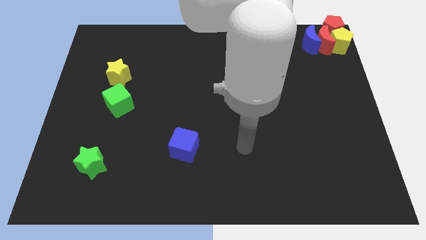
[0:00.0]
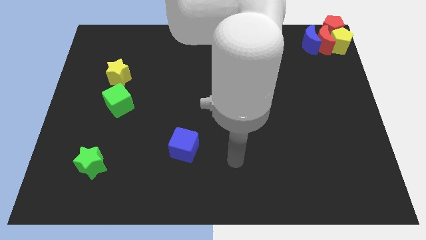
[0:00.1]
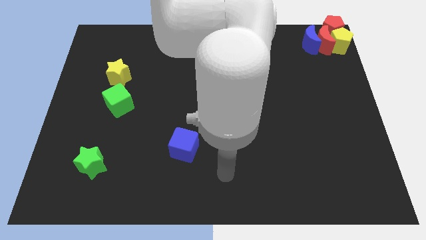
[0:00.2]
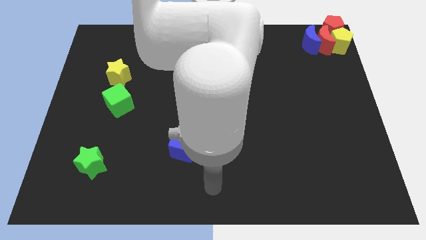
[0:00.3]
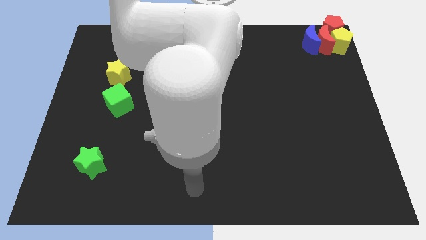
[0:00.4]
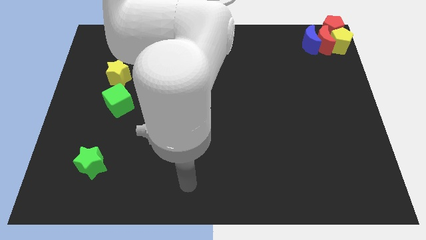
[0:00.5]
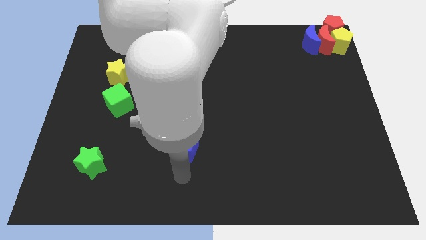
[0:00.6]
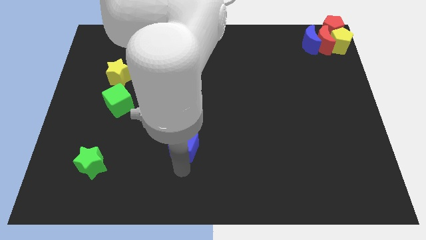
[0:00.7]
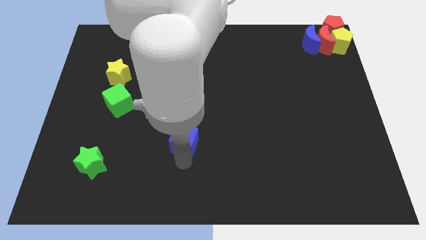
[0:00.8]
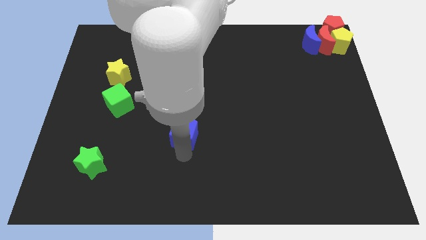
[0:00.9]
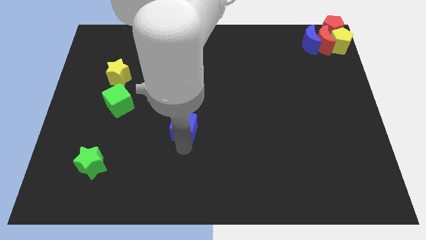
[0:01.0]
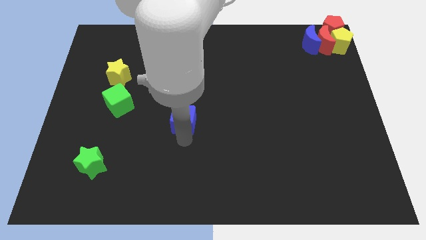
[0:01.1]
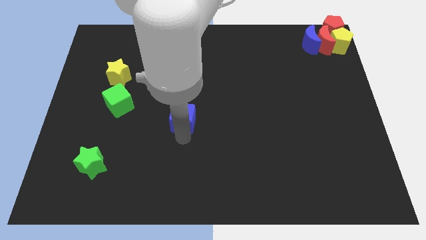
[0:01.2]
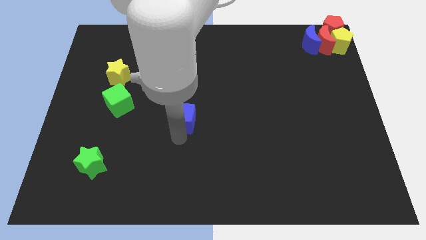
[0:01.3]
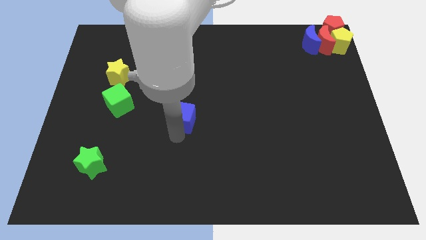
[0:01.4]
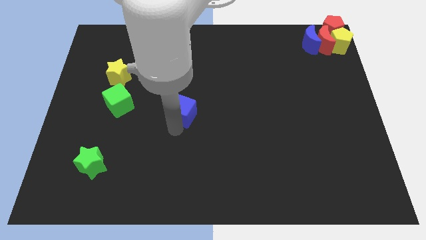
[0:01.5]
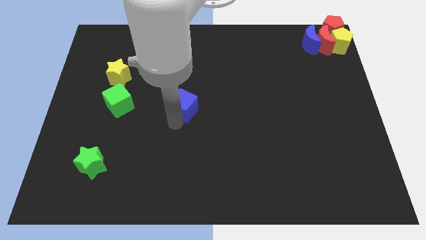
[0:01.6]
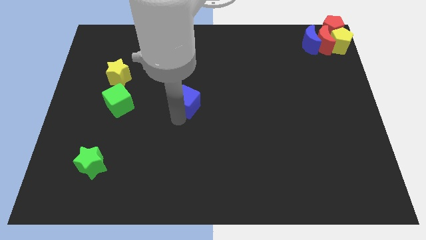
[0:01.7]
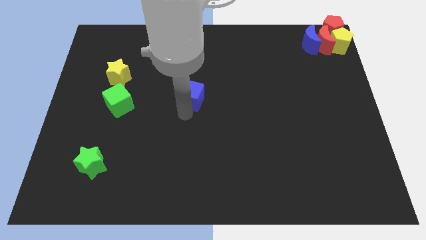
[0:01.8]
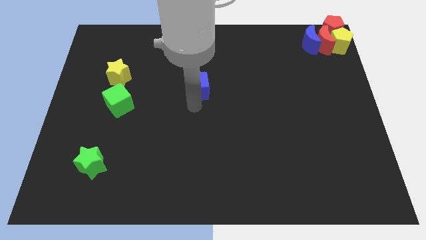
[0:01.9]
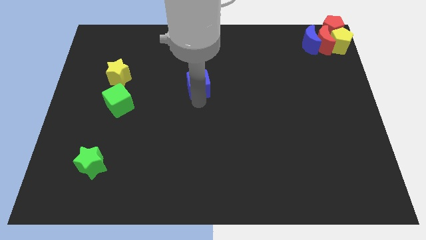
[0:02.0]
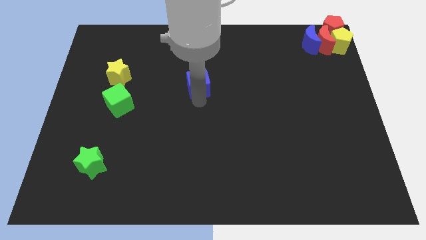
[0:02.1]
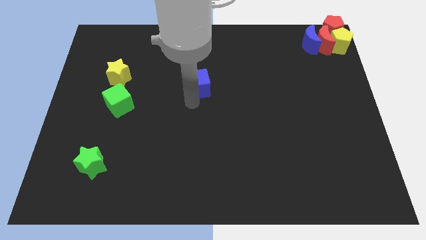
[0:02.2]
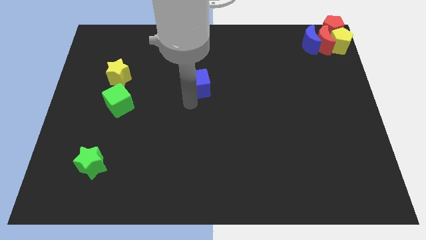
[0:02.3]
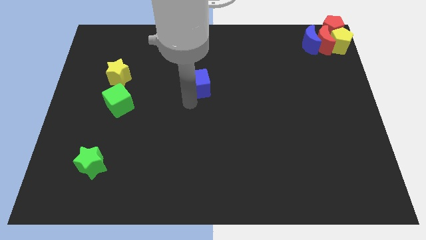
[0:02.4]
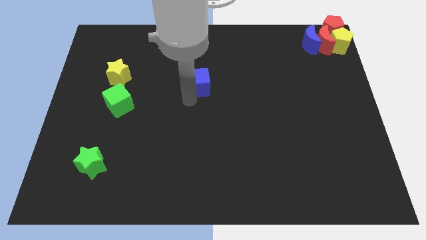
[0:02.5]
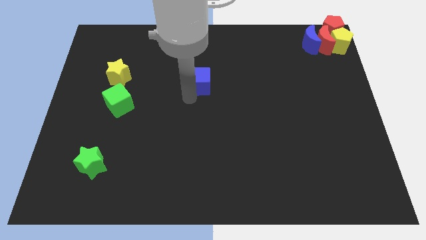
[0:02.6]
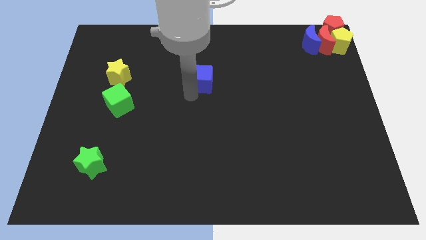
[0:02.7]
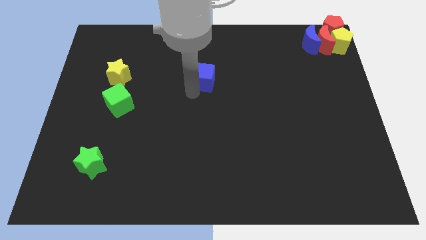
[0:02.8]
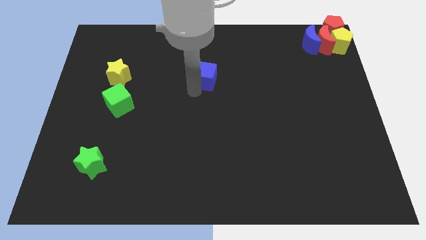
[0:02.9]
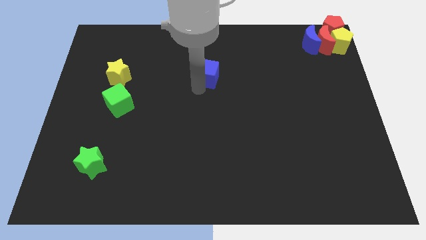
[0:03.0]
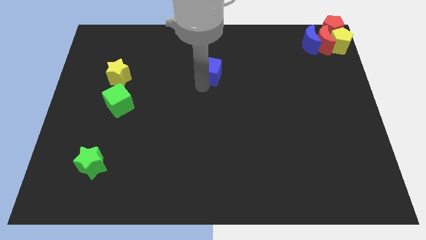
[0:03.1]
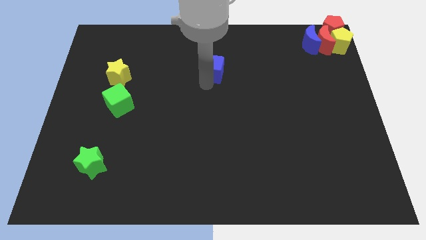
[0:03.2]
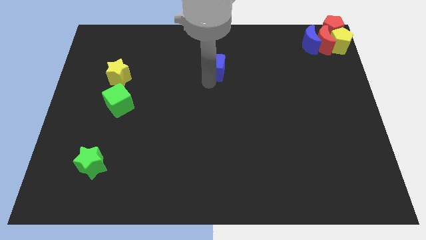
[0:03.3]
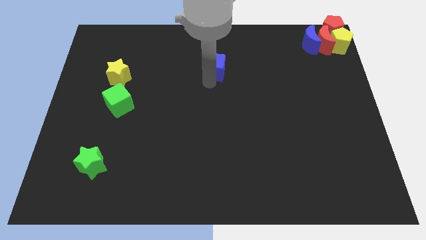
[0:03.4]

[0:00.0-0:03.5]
move the blue cube towards the top center

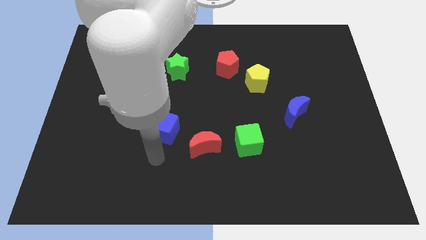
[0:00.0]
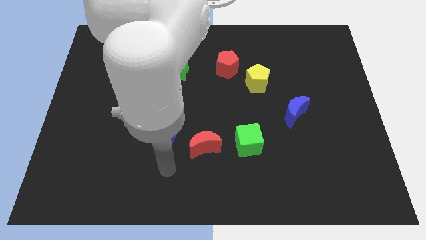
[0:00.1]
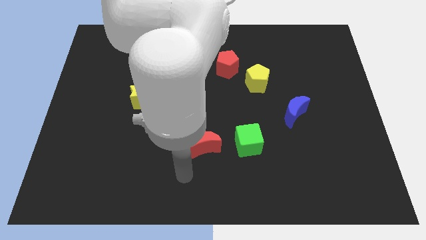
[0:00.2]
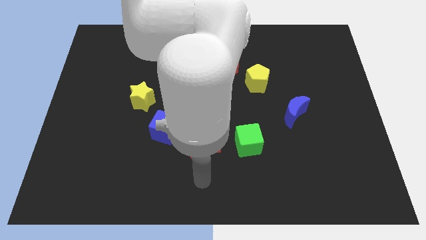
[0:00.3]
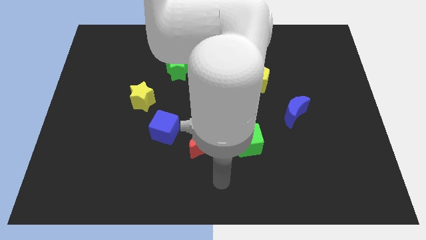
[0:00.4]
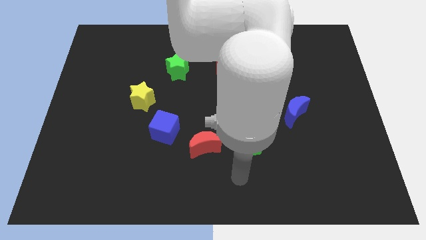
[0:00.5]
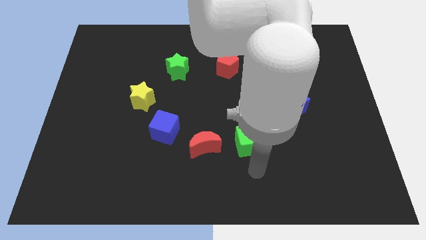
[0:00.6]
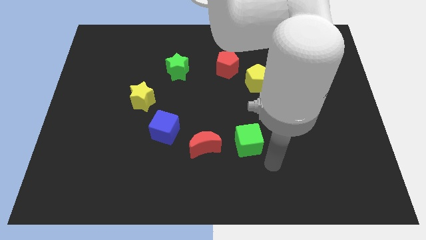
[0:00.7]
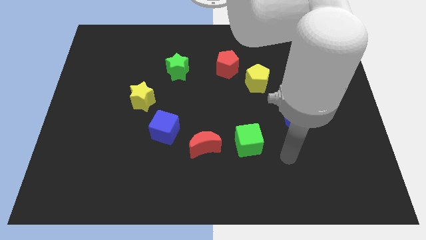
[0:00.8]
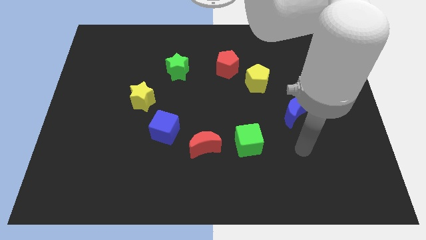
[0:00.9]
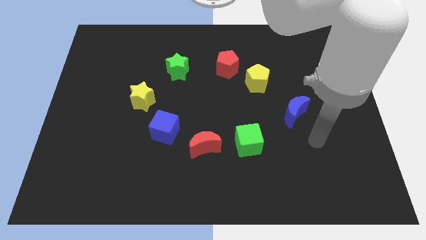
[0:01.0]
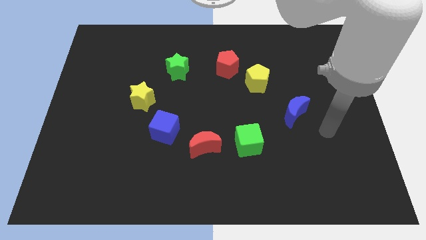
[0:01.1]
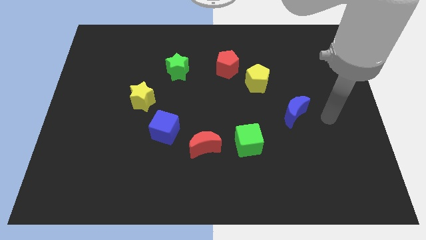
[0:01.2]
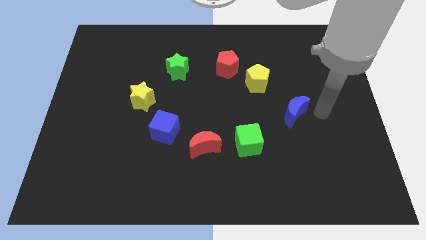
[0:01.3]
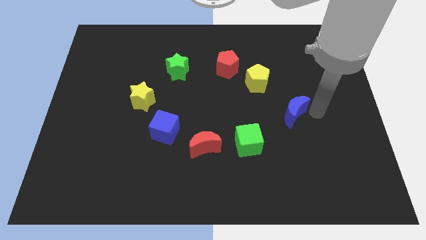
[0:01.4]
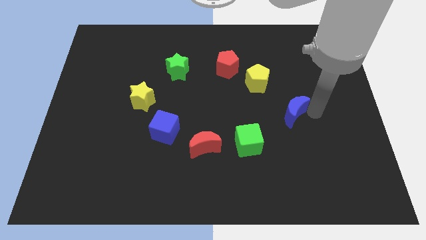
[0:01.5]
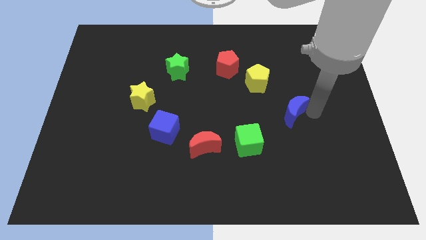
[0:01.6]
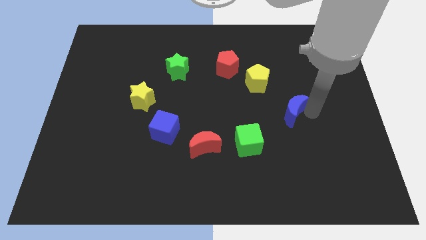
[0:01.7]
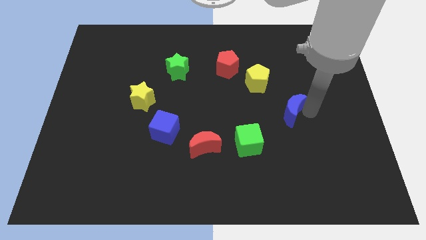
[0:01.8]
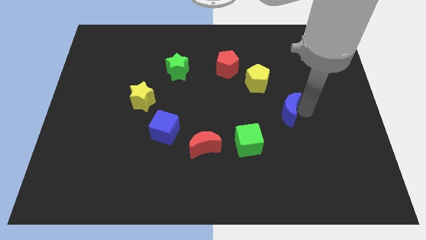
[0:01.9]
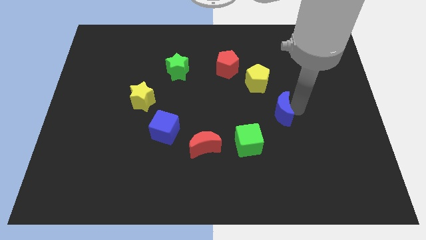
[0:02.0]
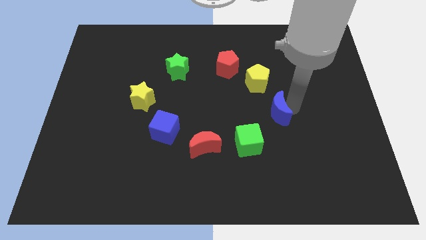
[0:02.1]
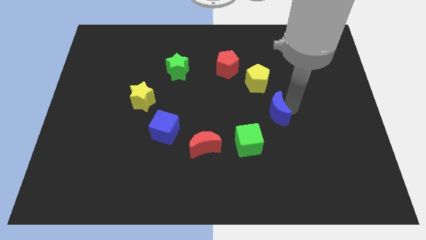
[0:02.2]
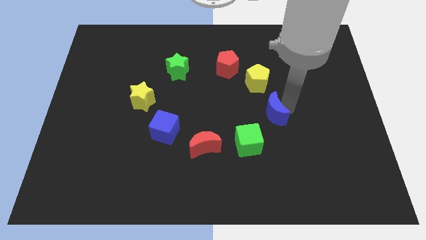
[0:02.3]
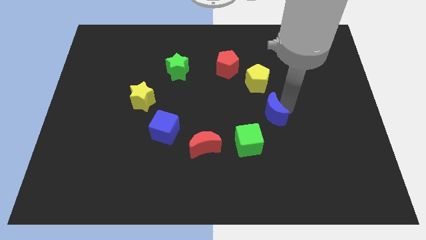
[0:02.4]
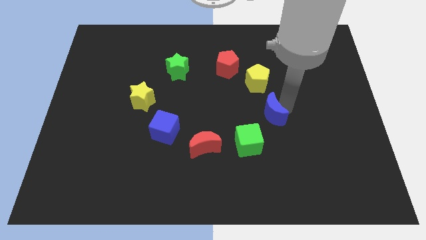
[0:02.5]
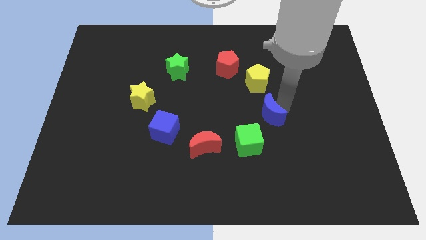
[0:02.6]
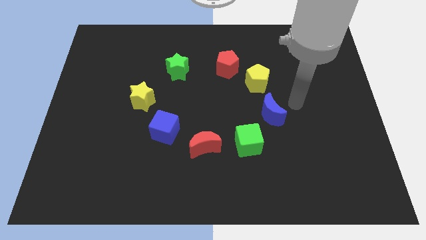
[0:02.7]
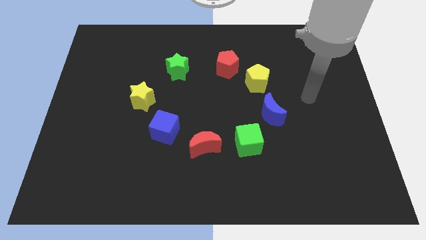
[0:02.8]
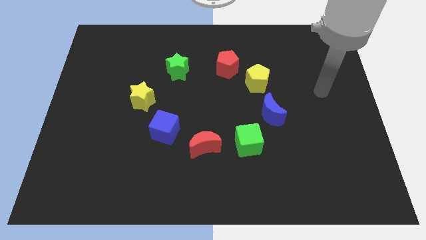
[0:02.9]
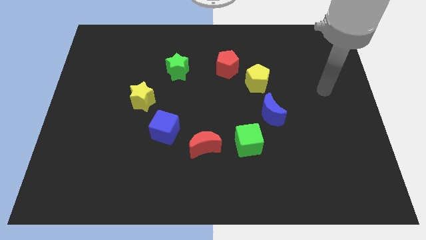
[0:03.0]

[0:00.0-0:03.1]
move the blue crescent to the bottom of the yellow pentagon

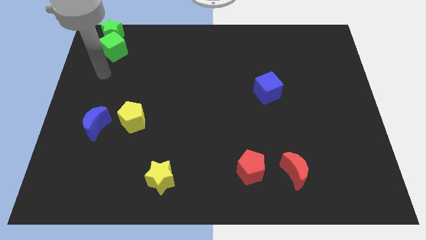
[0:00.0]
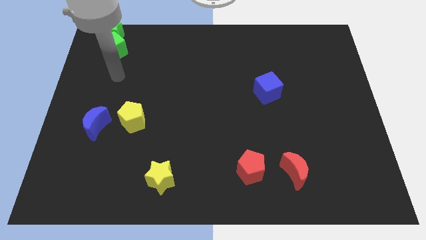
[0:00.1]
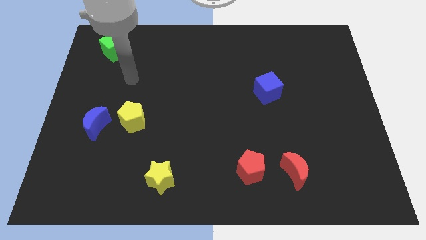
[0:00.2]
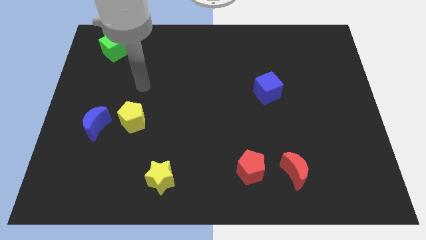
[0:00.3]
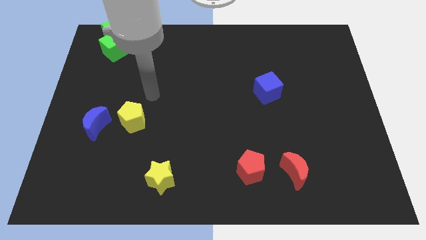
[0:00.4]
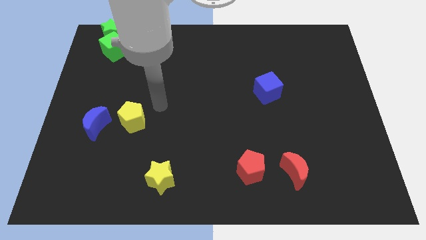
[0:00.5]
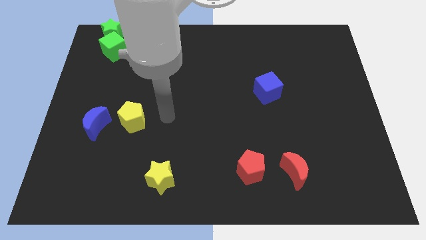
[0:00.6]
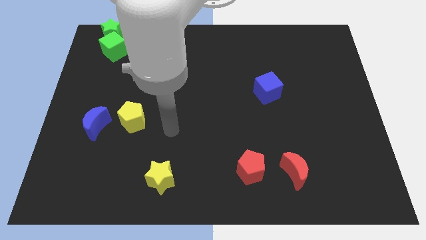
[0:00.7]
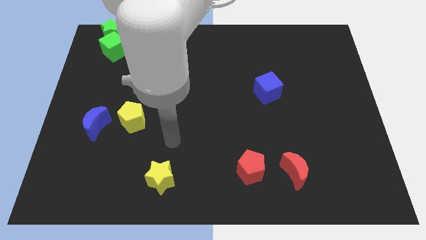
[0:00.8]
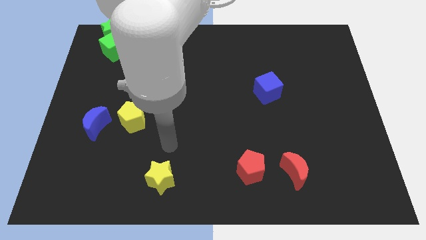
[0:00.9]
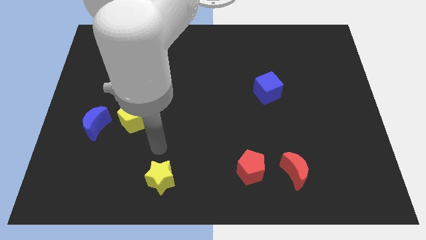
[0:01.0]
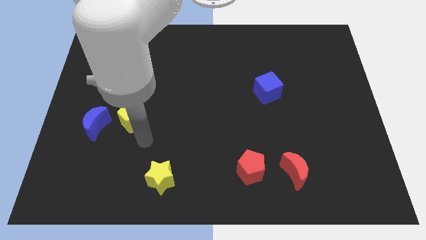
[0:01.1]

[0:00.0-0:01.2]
place arm in between yellow blocks

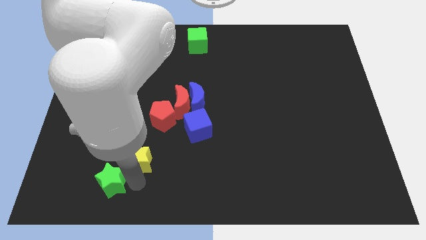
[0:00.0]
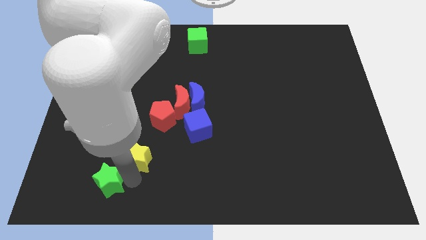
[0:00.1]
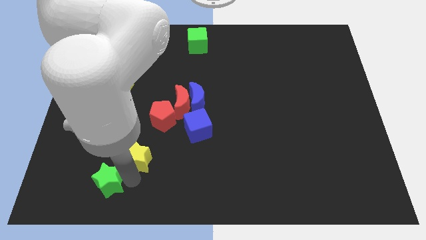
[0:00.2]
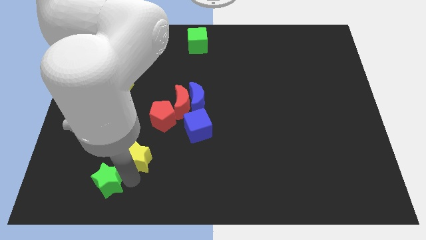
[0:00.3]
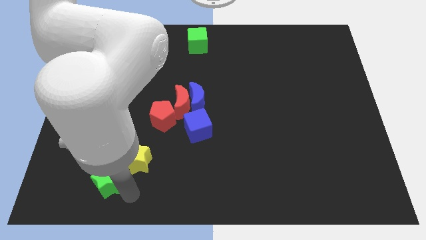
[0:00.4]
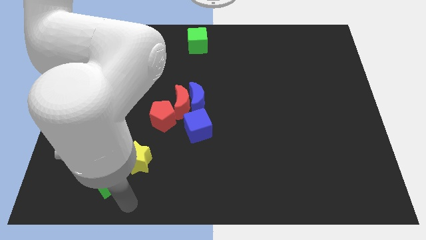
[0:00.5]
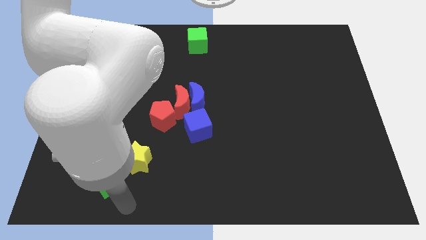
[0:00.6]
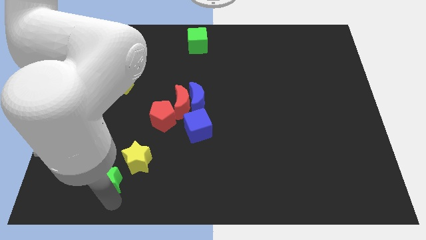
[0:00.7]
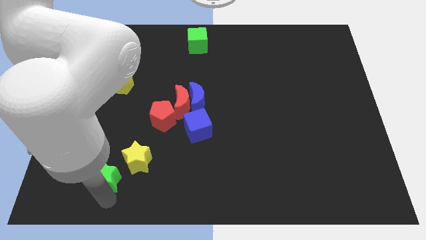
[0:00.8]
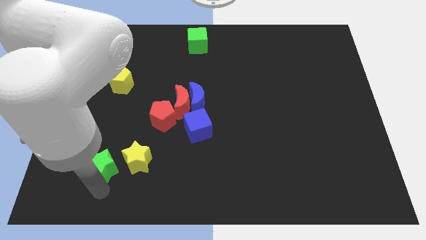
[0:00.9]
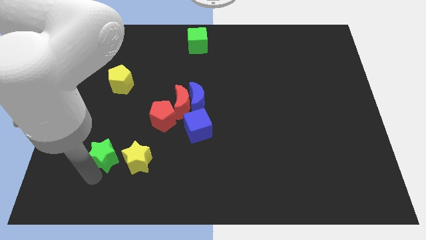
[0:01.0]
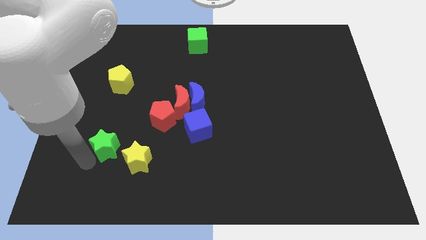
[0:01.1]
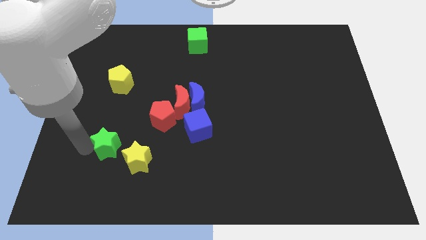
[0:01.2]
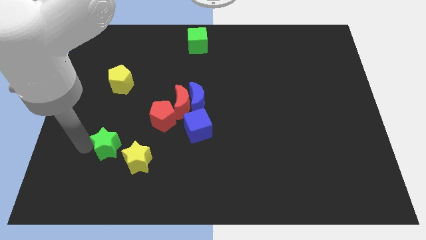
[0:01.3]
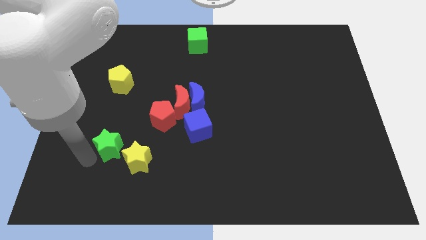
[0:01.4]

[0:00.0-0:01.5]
slightly move the green star away from the yellow star
